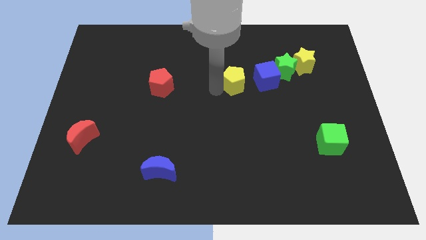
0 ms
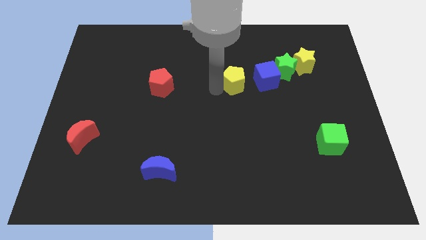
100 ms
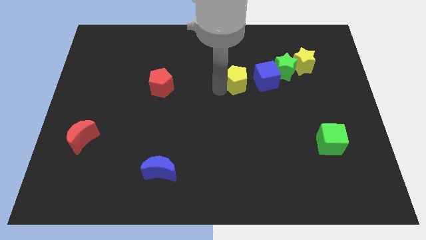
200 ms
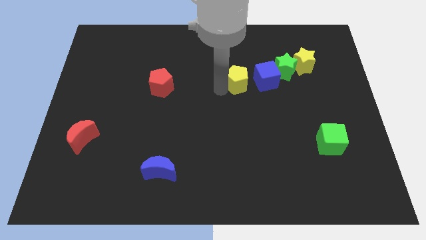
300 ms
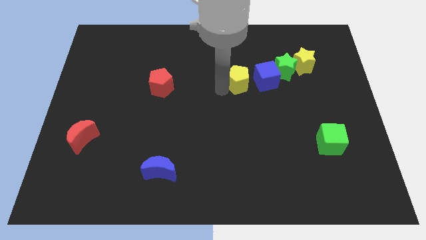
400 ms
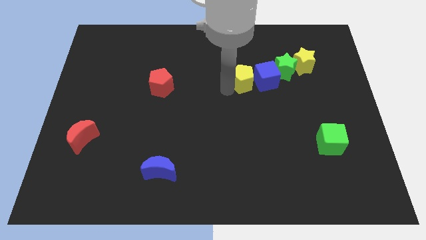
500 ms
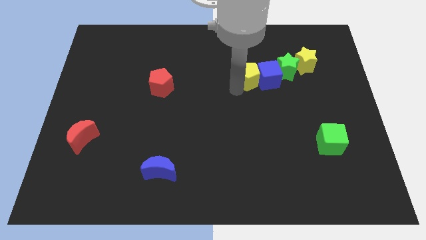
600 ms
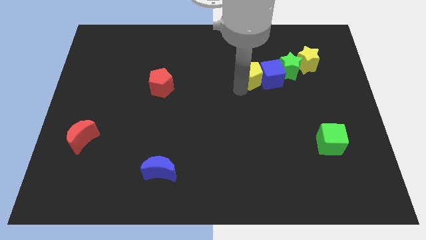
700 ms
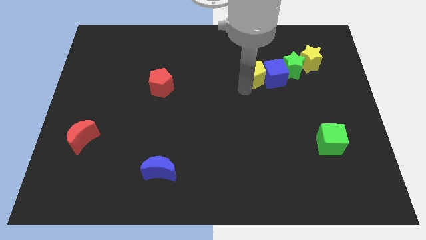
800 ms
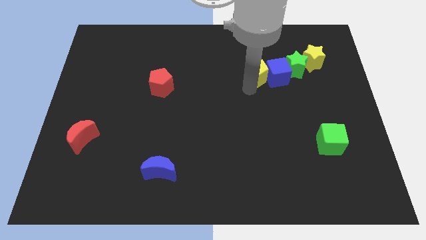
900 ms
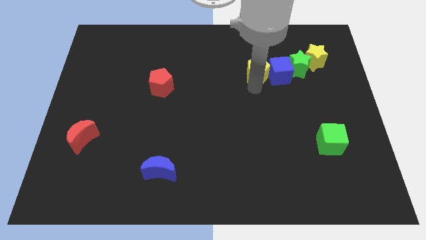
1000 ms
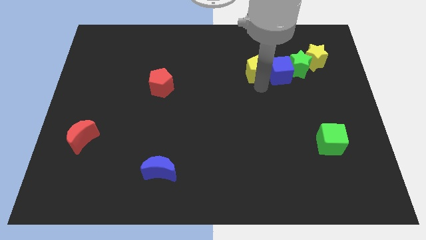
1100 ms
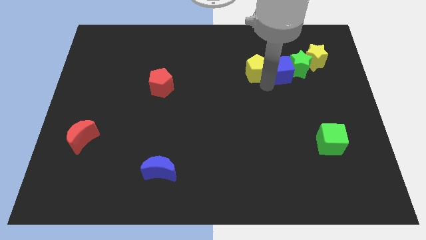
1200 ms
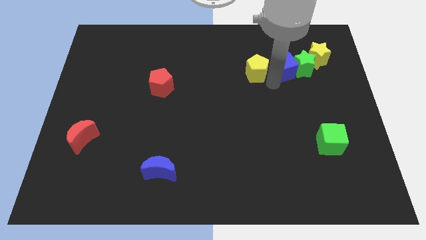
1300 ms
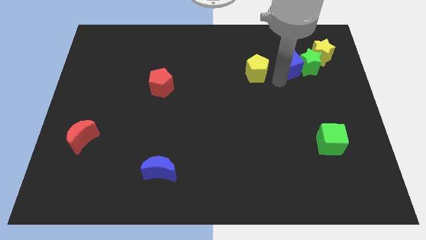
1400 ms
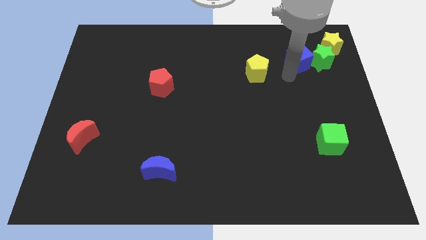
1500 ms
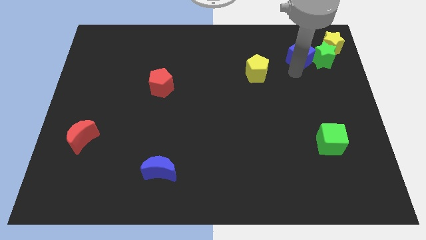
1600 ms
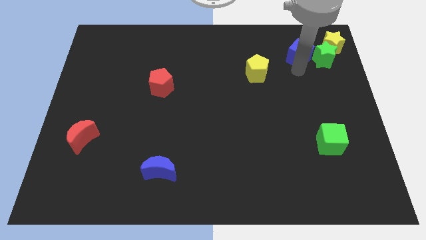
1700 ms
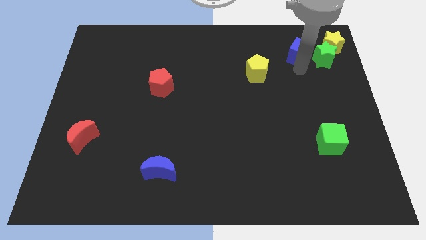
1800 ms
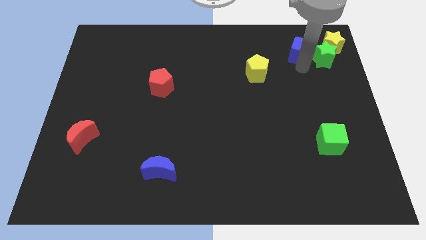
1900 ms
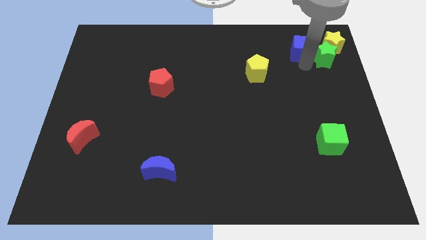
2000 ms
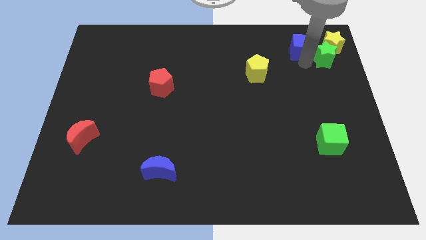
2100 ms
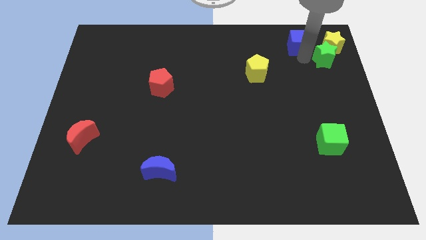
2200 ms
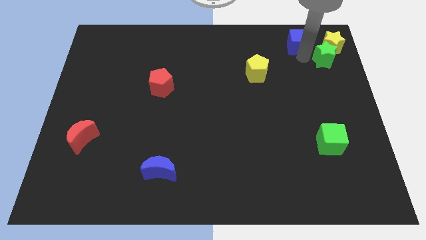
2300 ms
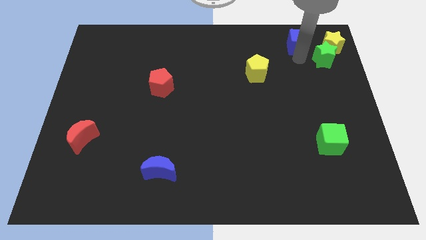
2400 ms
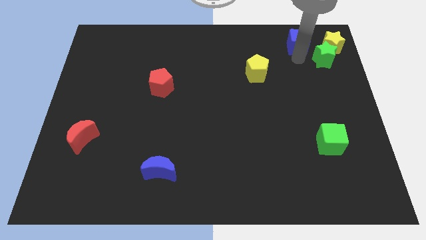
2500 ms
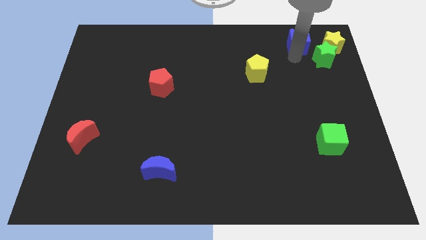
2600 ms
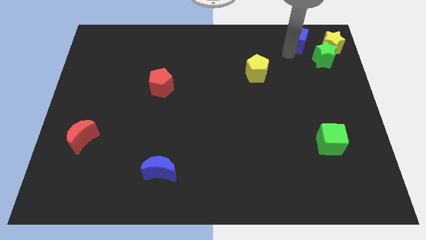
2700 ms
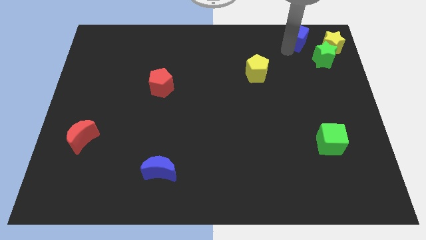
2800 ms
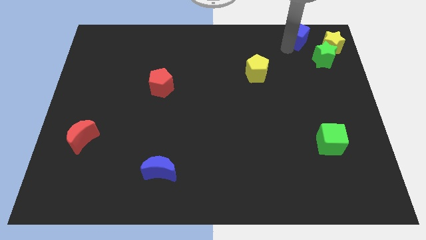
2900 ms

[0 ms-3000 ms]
separate the blue cube from the green star

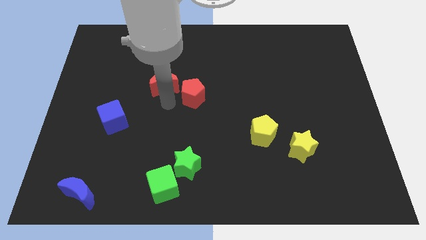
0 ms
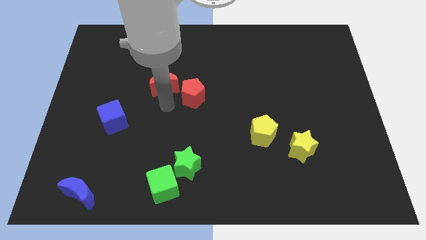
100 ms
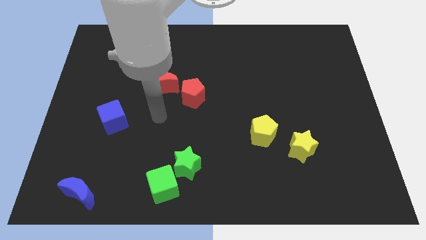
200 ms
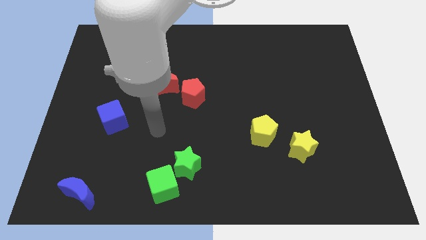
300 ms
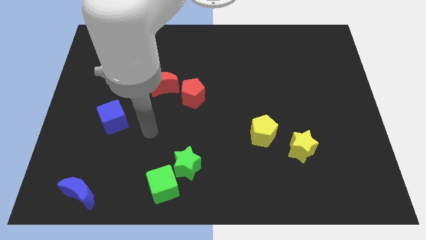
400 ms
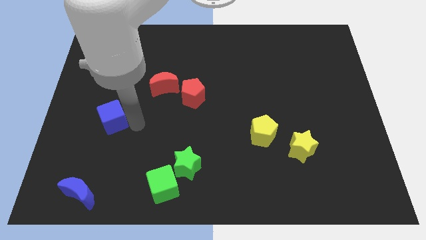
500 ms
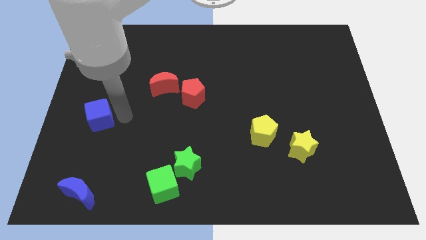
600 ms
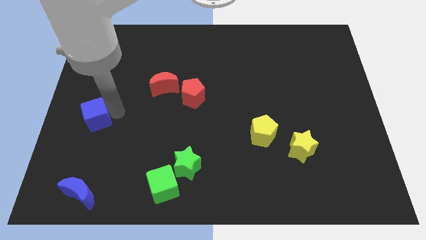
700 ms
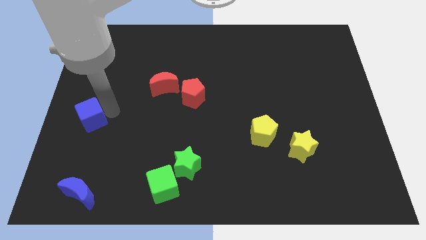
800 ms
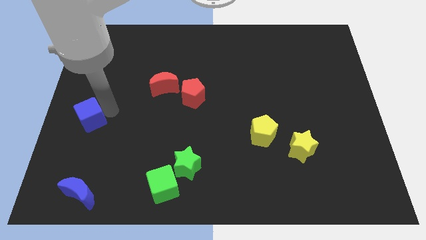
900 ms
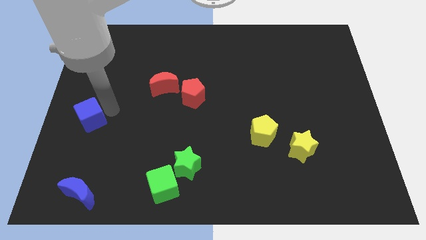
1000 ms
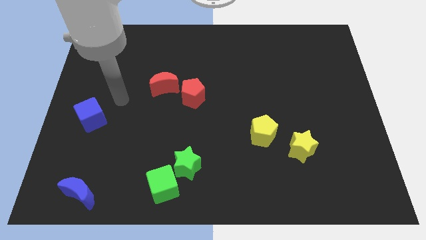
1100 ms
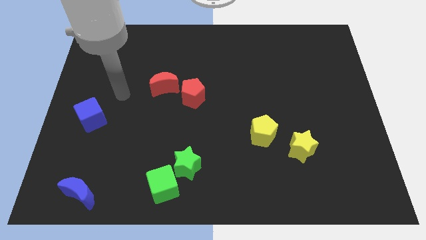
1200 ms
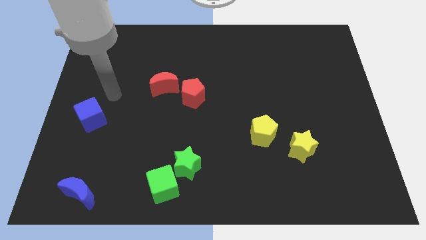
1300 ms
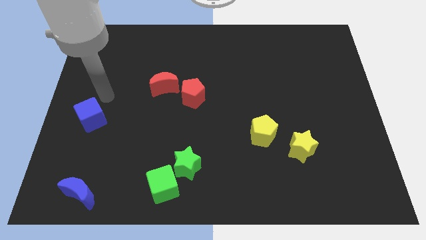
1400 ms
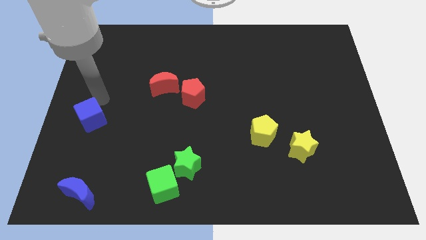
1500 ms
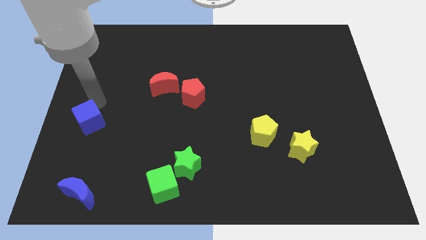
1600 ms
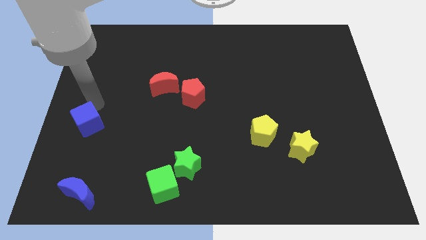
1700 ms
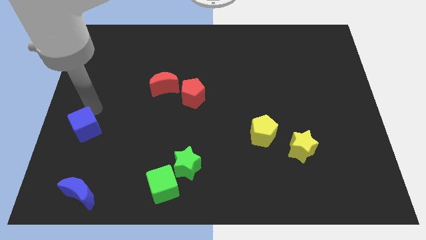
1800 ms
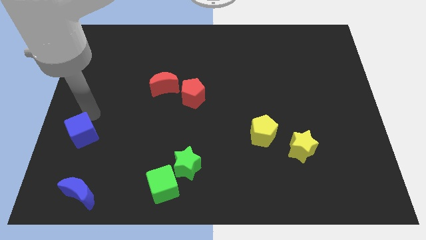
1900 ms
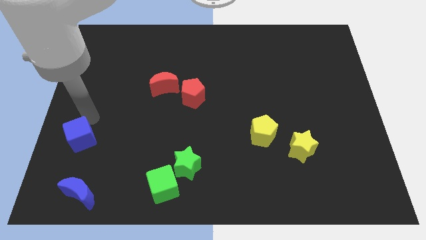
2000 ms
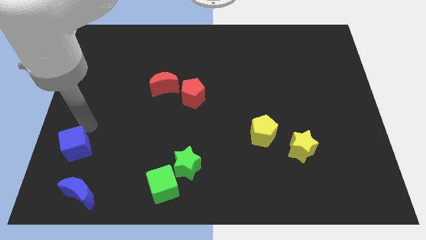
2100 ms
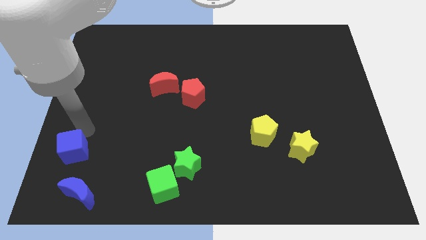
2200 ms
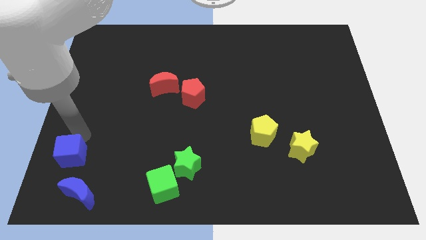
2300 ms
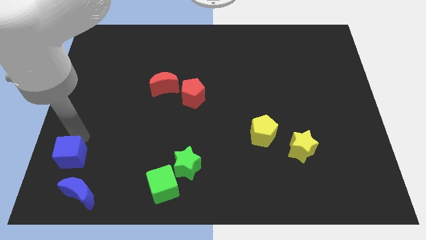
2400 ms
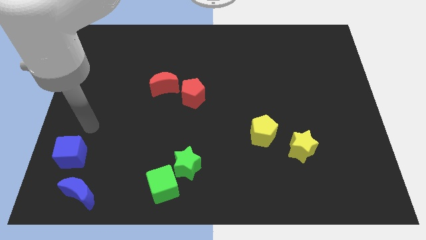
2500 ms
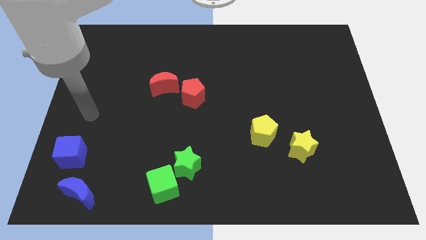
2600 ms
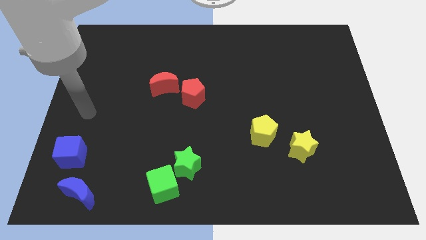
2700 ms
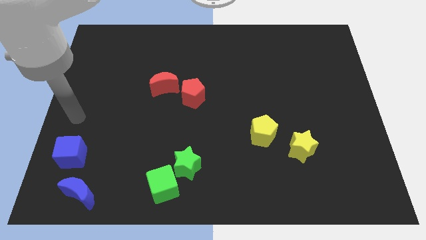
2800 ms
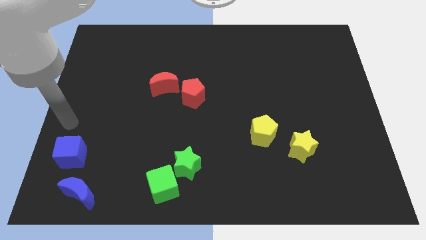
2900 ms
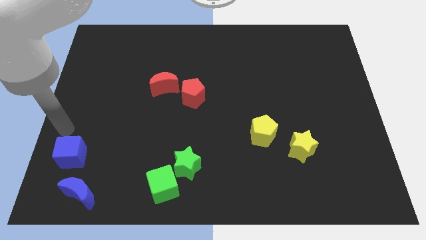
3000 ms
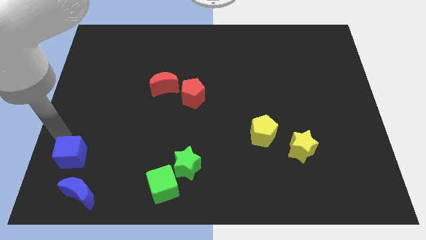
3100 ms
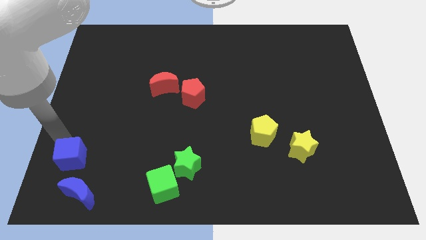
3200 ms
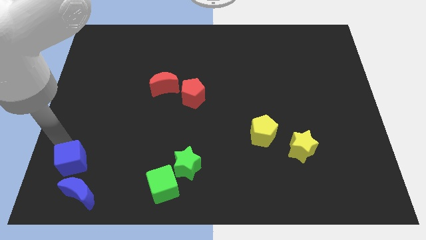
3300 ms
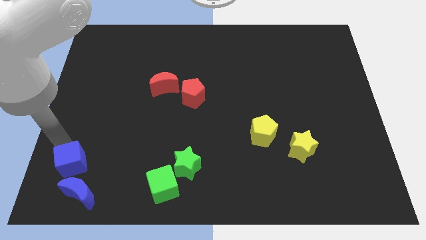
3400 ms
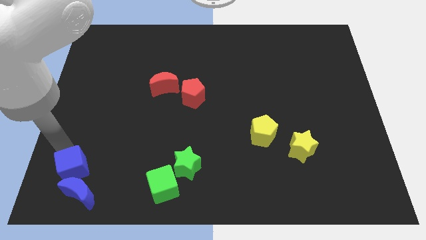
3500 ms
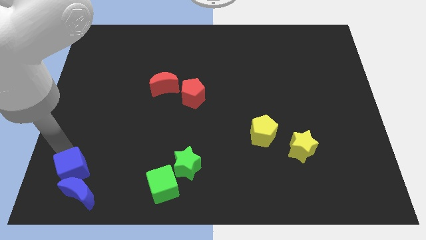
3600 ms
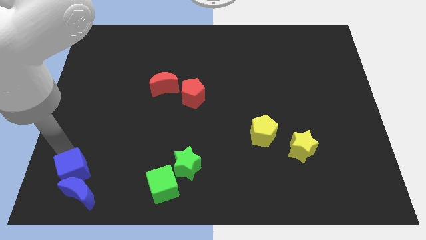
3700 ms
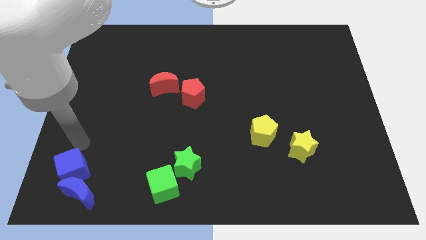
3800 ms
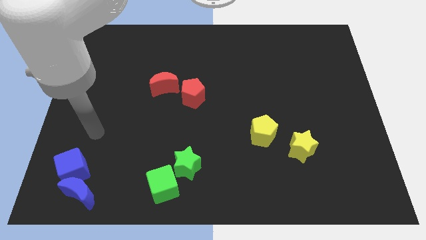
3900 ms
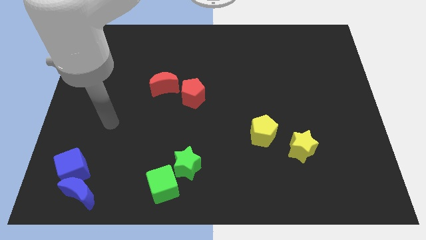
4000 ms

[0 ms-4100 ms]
push the blue cube to the top of the blue crescent

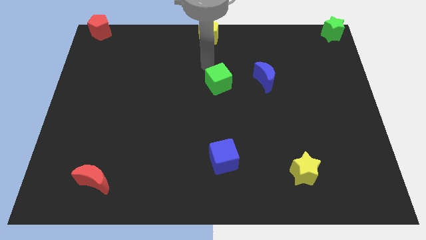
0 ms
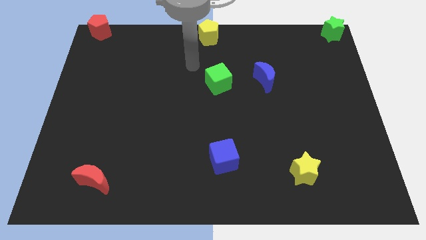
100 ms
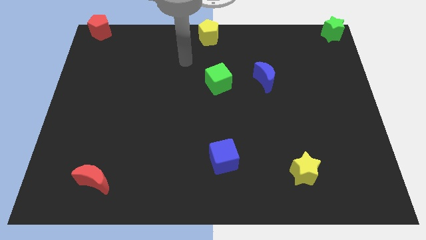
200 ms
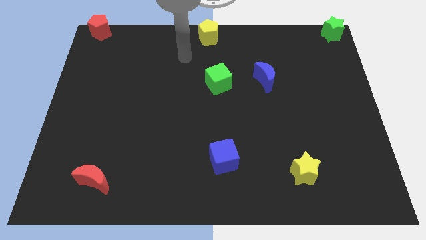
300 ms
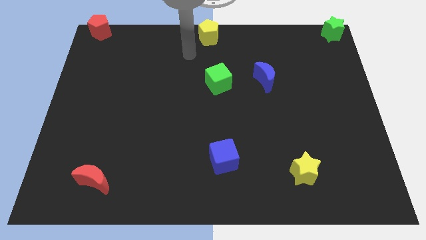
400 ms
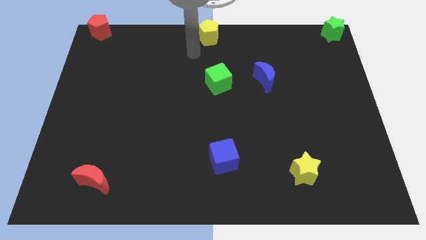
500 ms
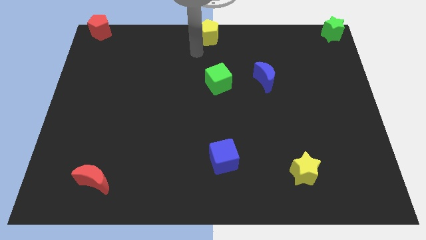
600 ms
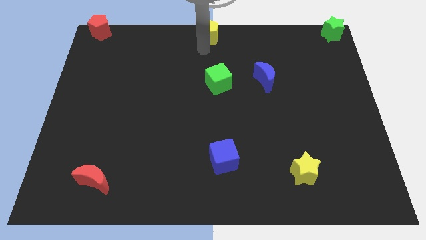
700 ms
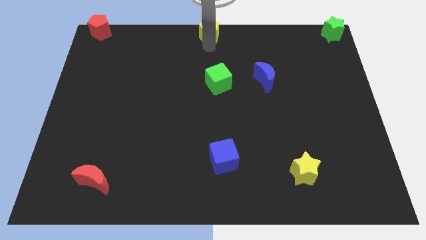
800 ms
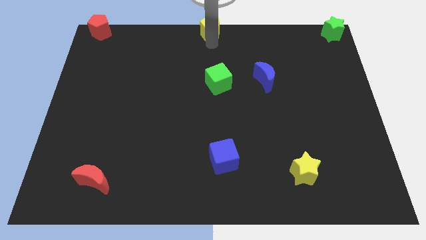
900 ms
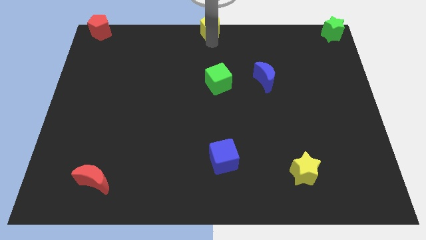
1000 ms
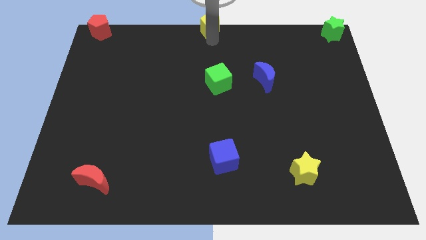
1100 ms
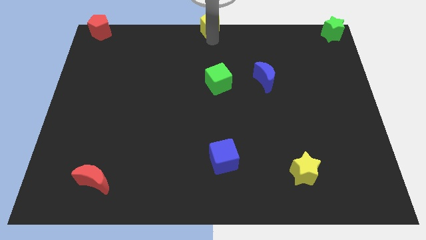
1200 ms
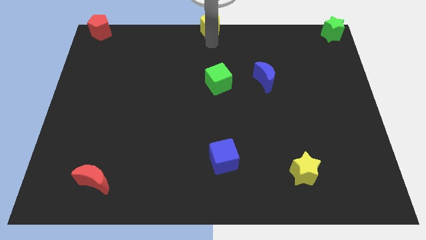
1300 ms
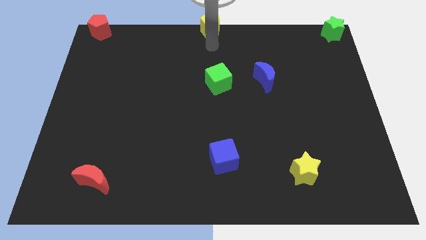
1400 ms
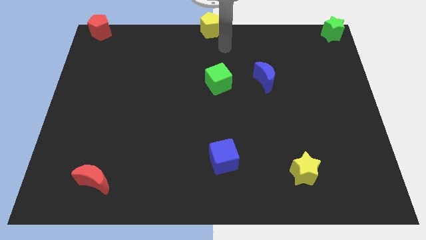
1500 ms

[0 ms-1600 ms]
adjust the yellow pentagon at the top of the board

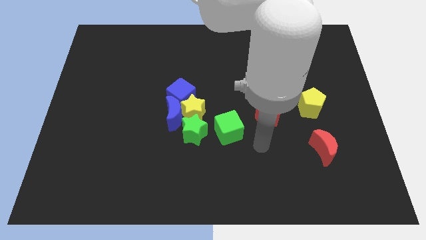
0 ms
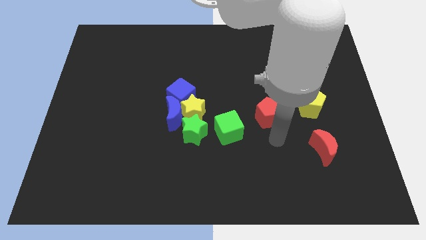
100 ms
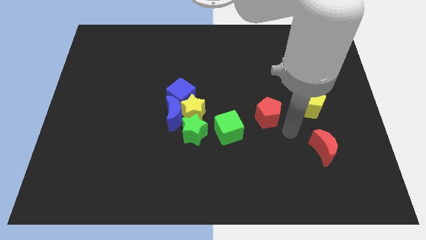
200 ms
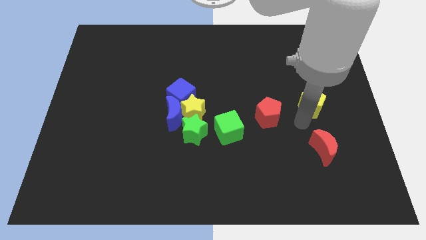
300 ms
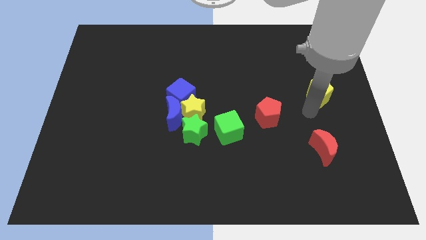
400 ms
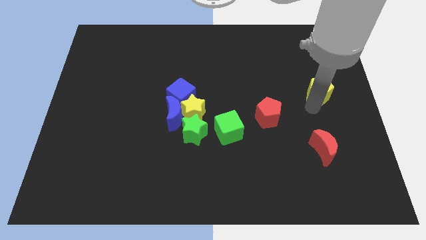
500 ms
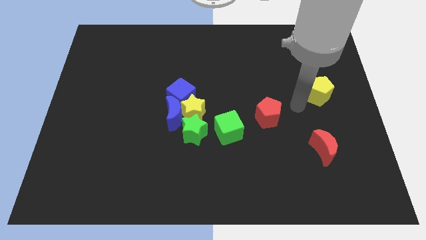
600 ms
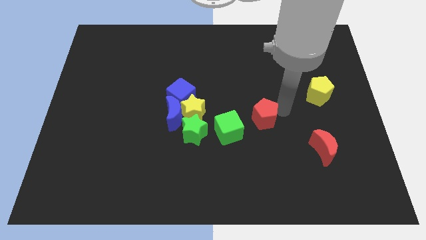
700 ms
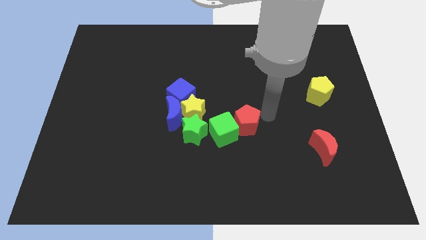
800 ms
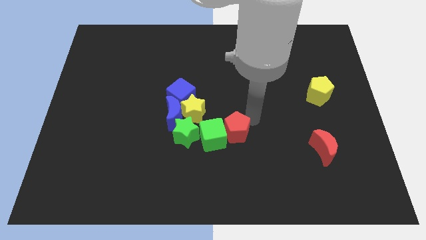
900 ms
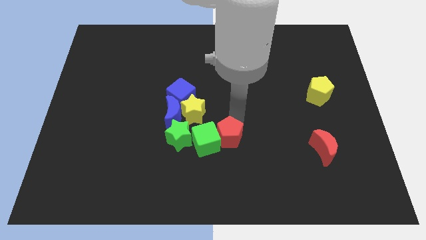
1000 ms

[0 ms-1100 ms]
push red pentagon into the green cube
